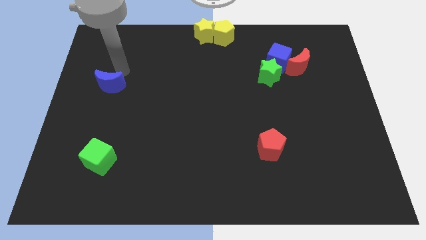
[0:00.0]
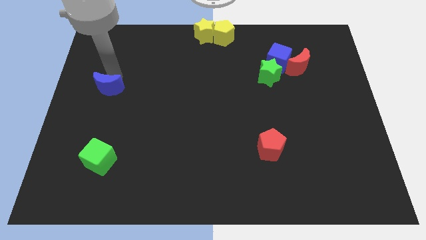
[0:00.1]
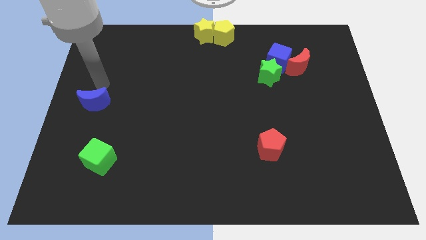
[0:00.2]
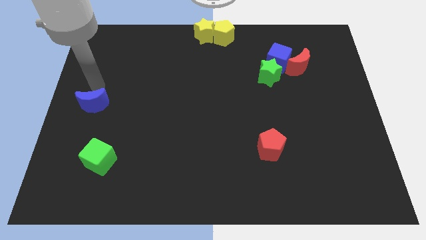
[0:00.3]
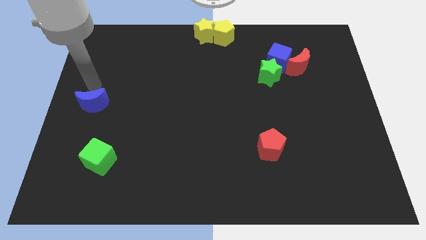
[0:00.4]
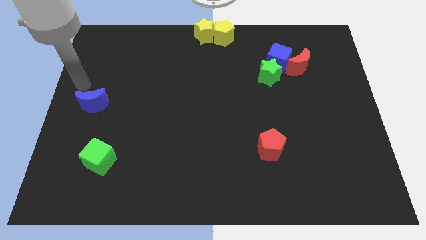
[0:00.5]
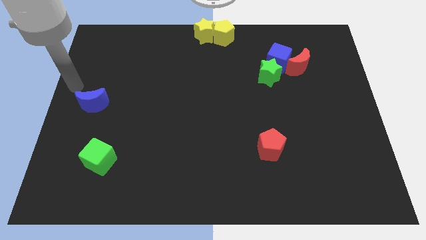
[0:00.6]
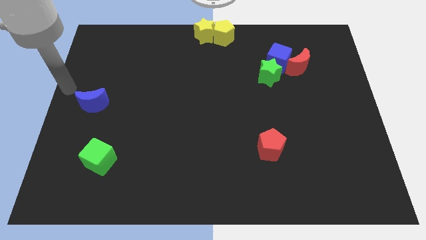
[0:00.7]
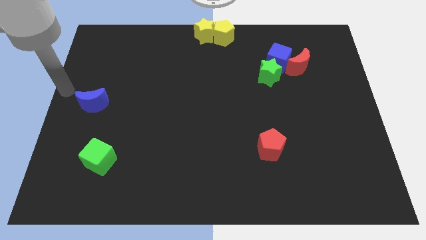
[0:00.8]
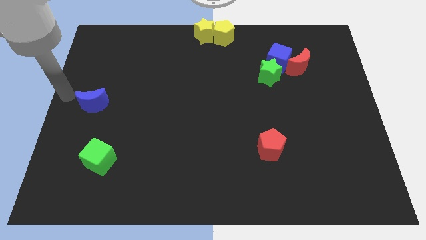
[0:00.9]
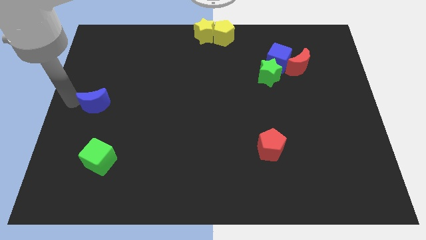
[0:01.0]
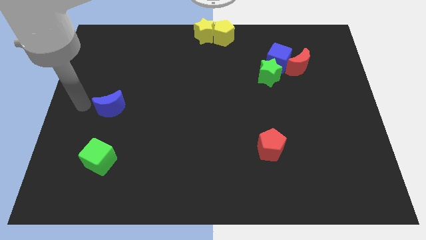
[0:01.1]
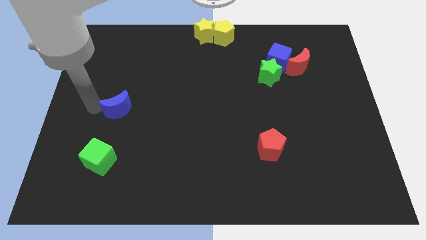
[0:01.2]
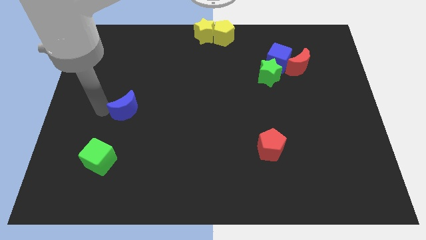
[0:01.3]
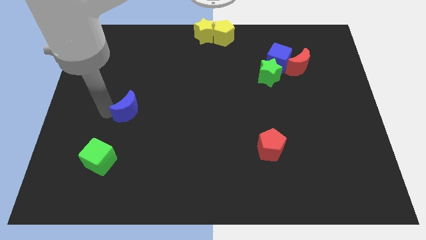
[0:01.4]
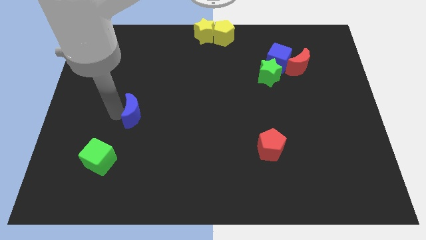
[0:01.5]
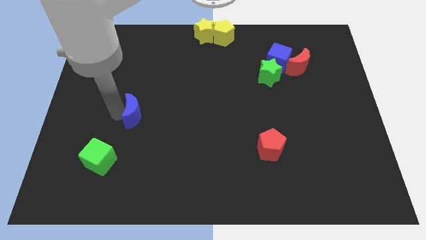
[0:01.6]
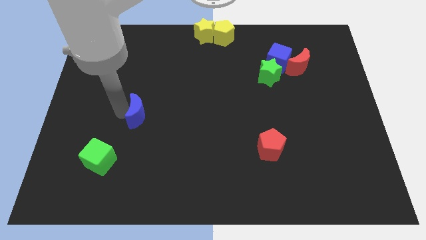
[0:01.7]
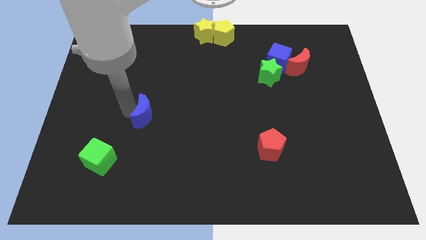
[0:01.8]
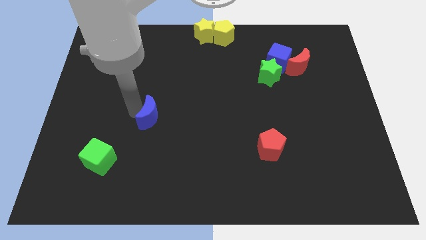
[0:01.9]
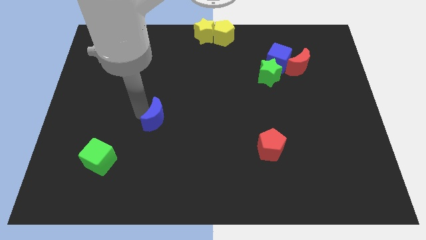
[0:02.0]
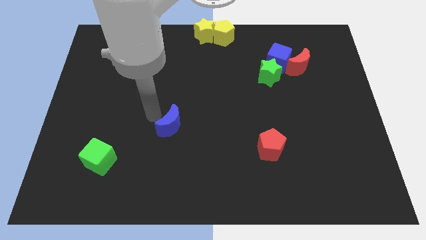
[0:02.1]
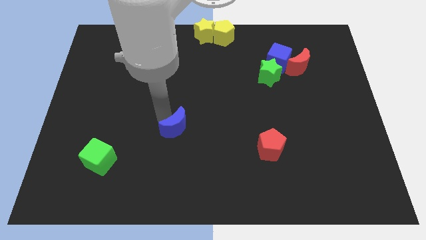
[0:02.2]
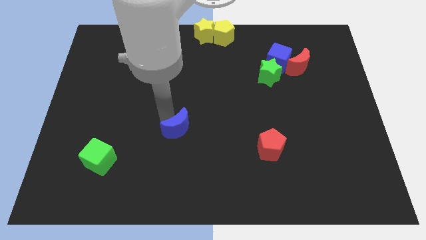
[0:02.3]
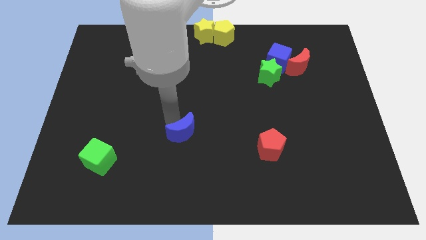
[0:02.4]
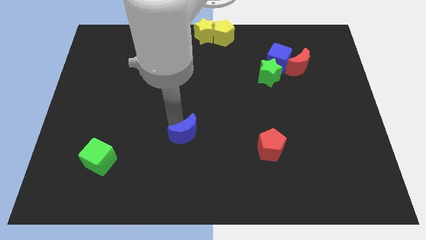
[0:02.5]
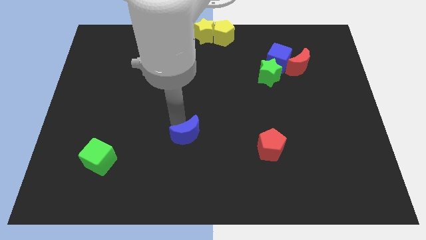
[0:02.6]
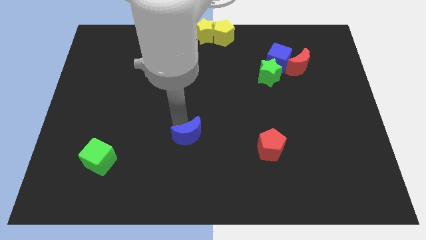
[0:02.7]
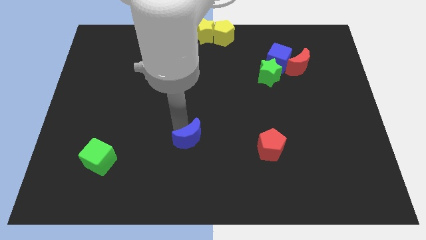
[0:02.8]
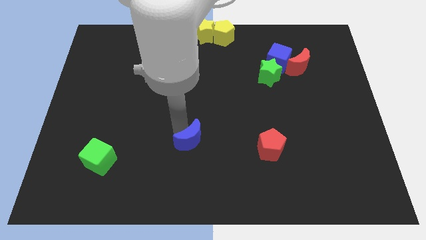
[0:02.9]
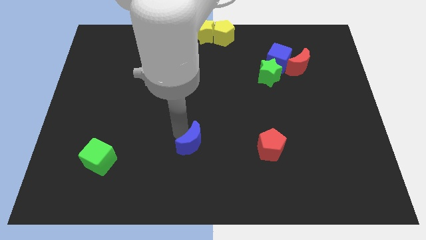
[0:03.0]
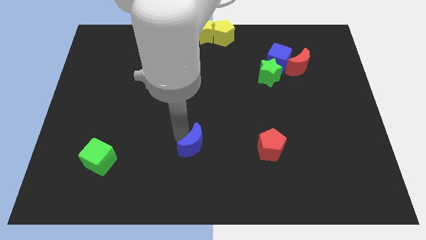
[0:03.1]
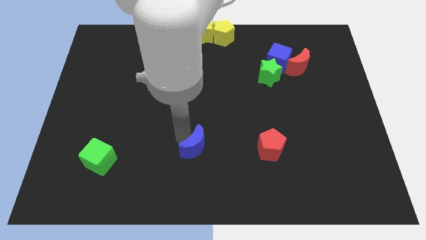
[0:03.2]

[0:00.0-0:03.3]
place blue crescent in between red pentagon and green cube

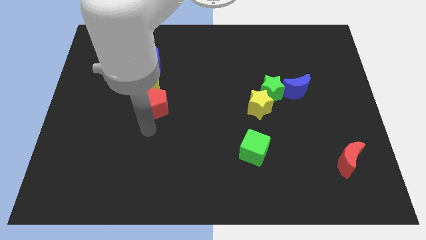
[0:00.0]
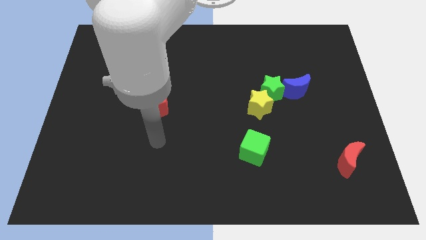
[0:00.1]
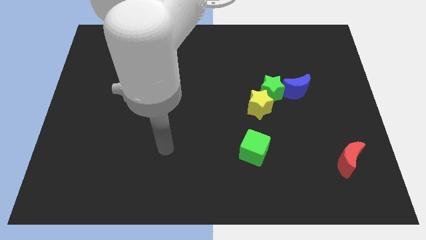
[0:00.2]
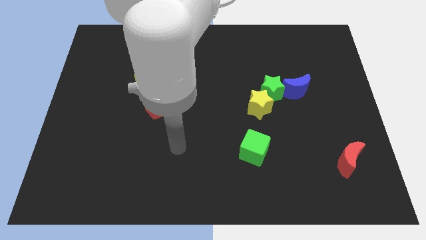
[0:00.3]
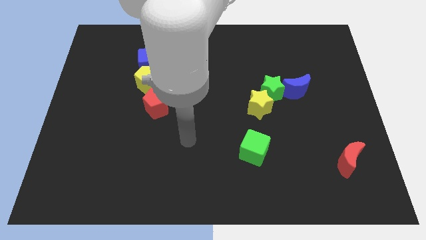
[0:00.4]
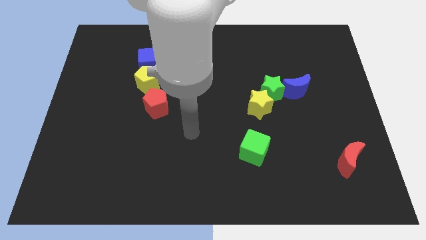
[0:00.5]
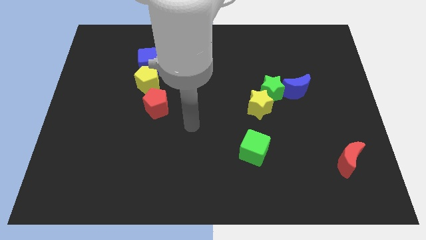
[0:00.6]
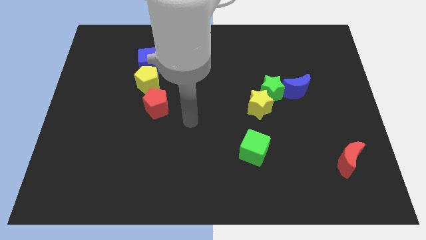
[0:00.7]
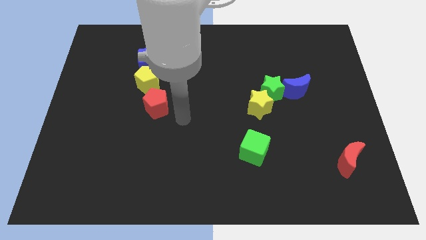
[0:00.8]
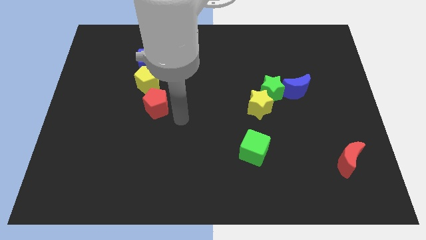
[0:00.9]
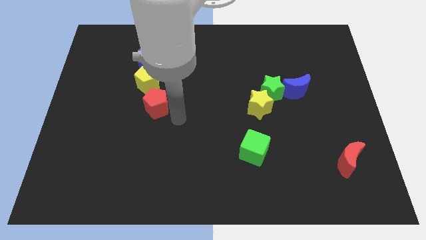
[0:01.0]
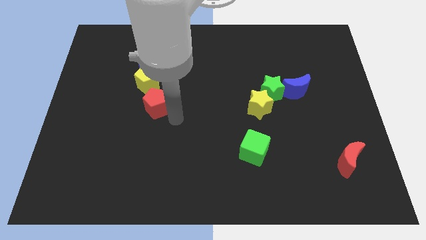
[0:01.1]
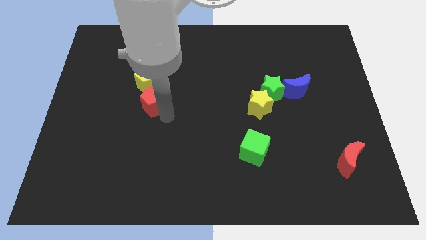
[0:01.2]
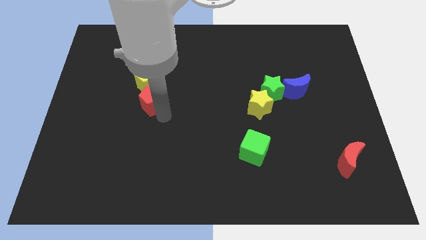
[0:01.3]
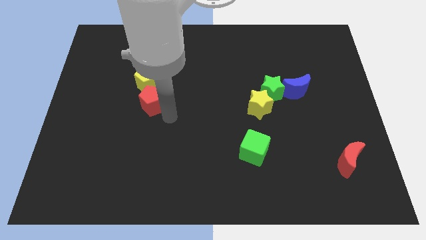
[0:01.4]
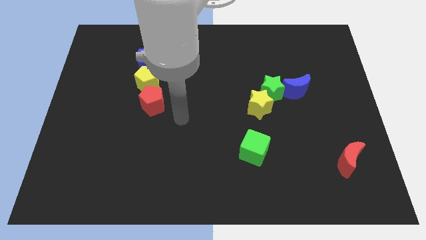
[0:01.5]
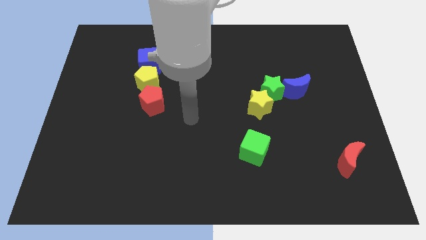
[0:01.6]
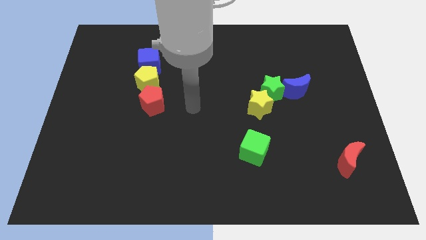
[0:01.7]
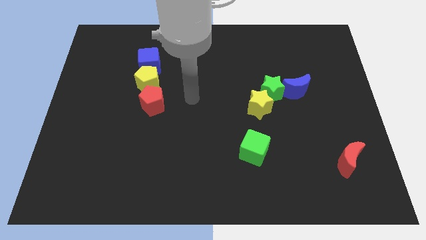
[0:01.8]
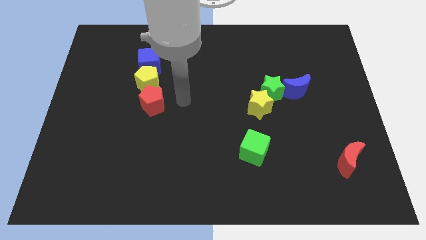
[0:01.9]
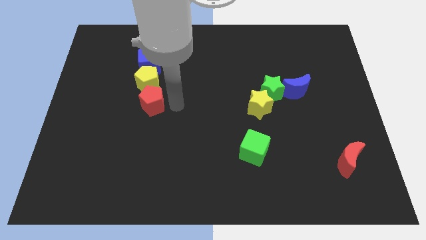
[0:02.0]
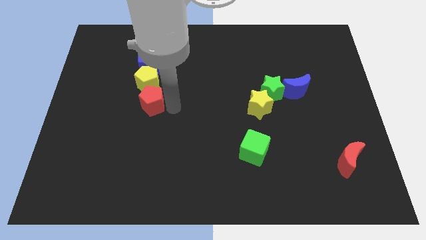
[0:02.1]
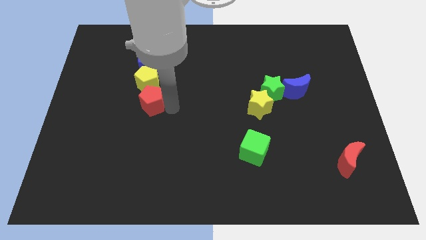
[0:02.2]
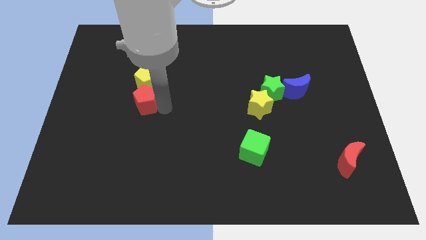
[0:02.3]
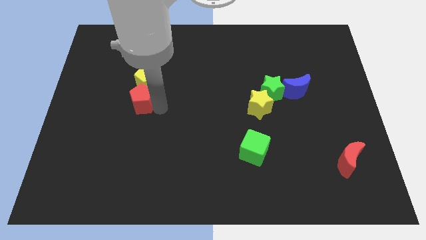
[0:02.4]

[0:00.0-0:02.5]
push the red pentagon to the bottom of the yellow pentagon

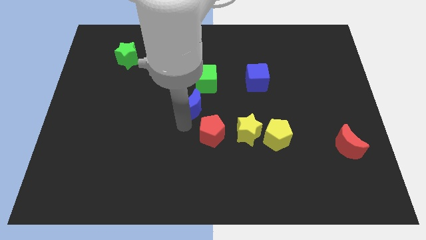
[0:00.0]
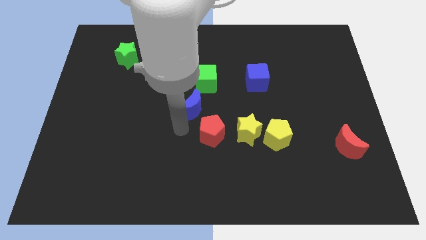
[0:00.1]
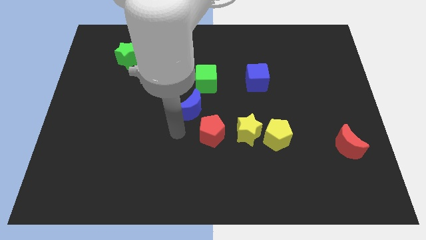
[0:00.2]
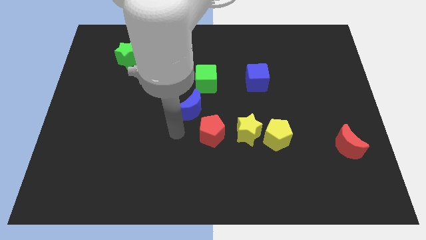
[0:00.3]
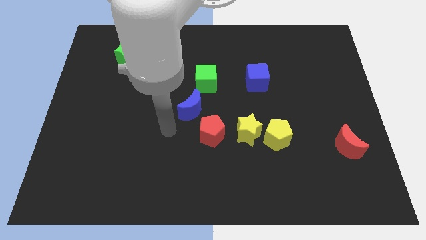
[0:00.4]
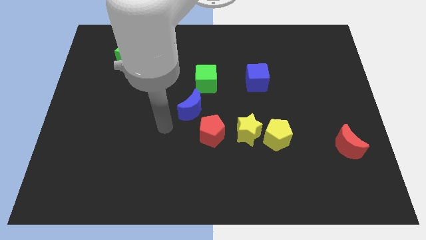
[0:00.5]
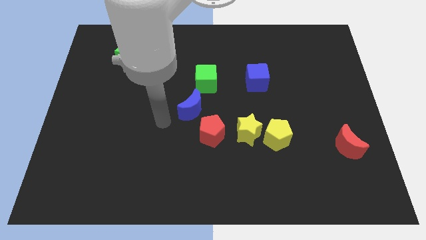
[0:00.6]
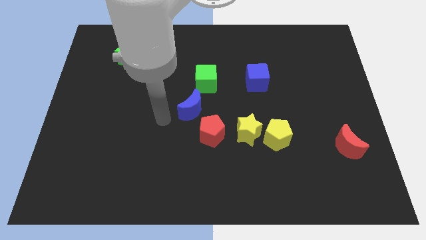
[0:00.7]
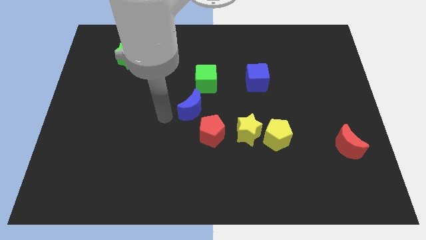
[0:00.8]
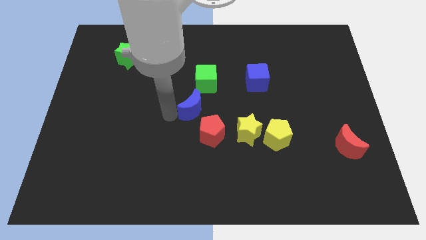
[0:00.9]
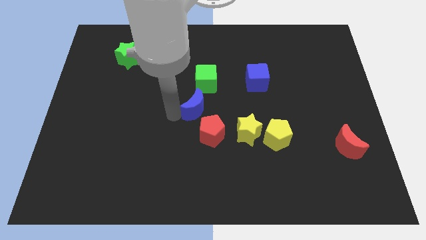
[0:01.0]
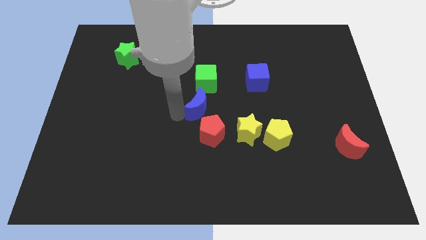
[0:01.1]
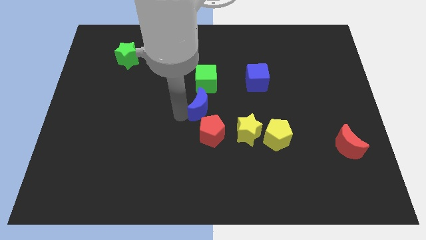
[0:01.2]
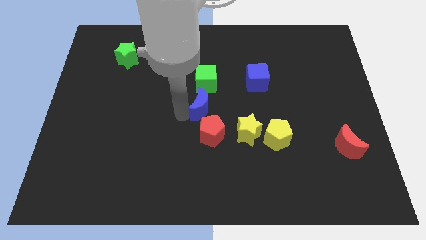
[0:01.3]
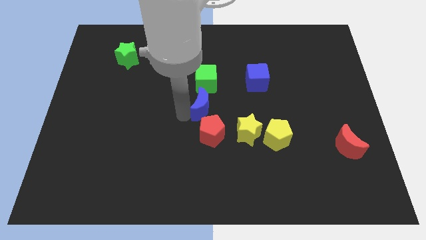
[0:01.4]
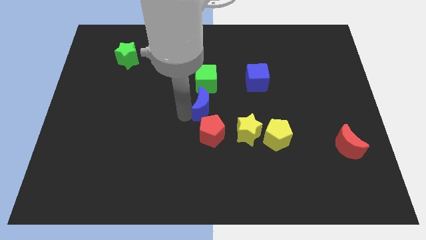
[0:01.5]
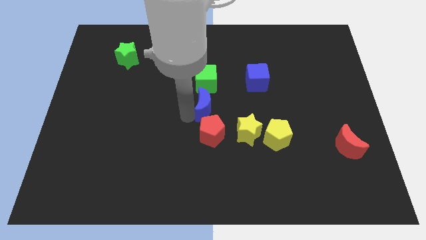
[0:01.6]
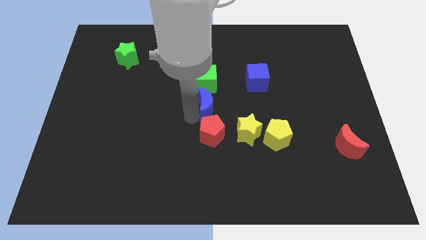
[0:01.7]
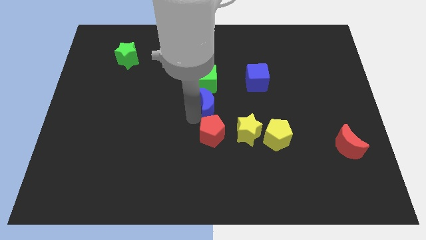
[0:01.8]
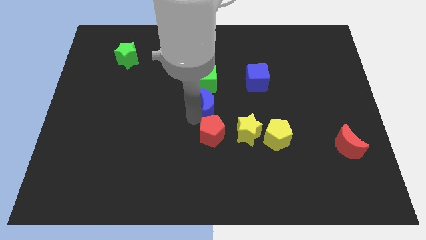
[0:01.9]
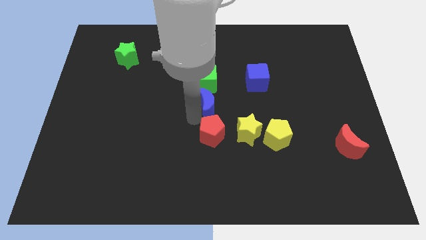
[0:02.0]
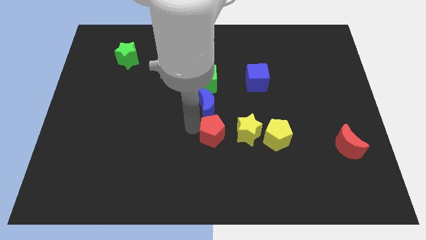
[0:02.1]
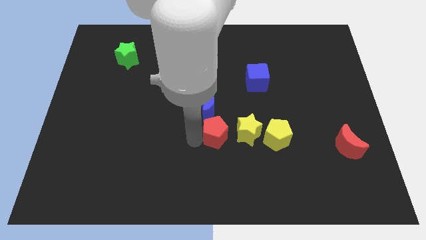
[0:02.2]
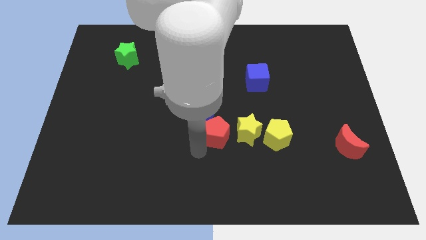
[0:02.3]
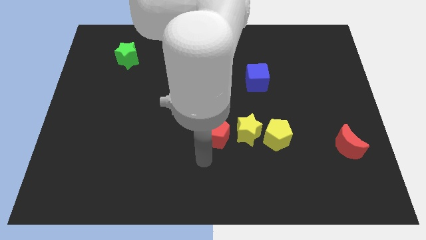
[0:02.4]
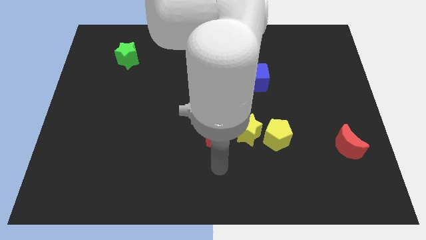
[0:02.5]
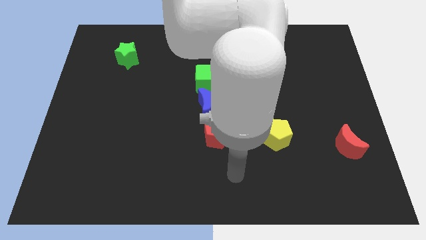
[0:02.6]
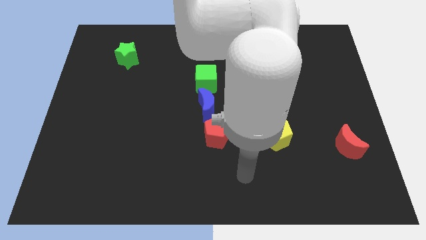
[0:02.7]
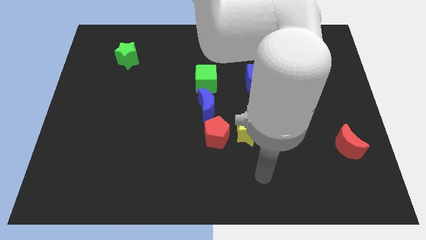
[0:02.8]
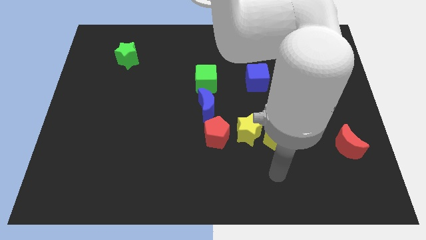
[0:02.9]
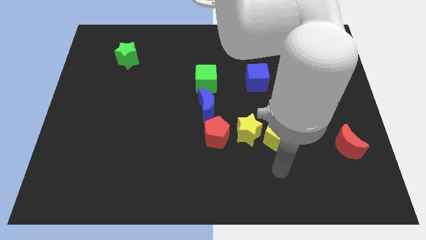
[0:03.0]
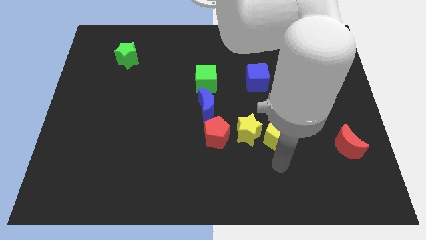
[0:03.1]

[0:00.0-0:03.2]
move your arm towards the bottom side of the yellow pentagon
